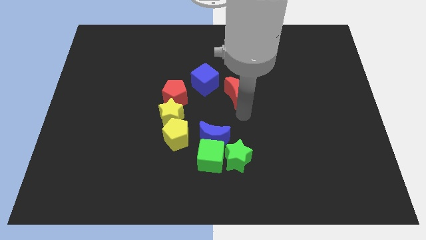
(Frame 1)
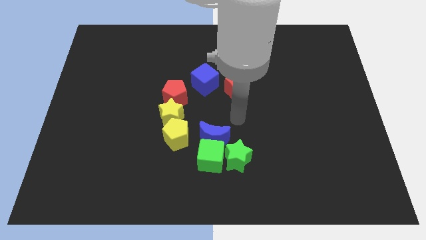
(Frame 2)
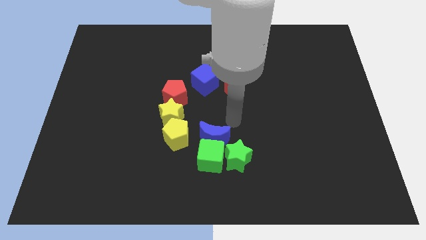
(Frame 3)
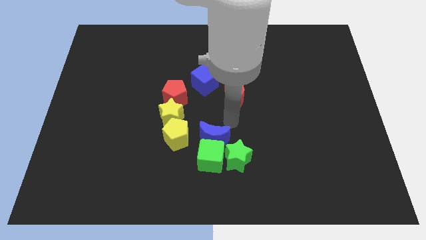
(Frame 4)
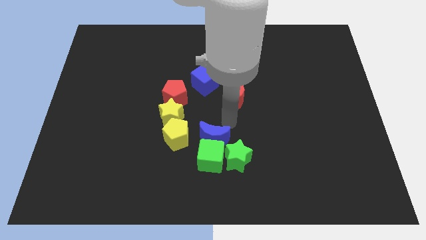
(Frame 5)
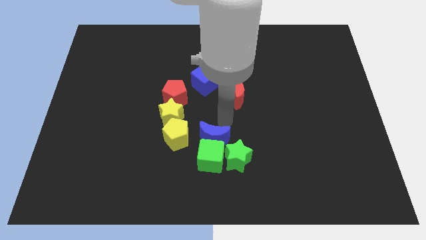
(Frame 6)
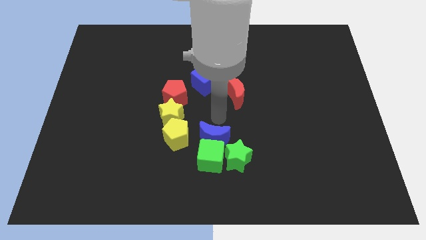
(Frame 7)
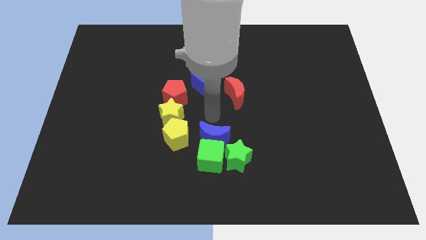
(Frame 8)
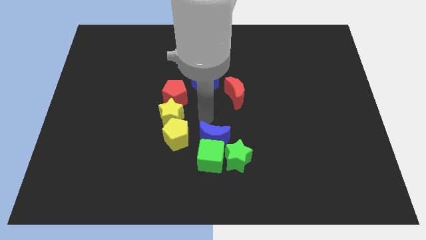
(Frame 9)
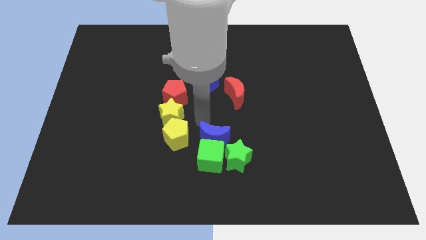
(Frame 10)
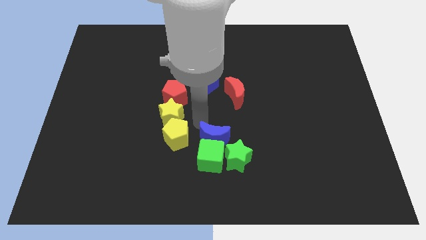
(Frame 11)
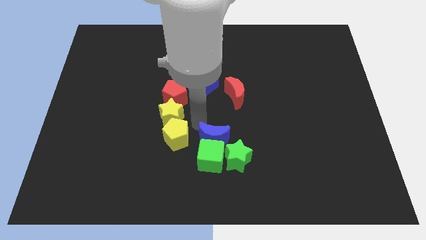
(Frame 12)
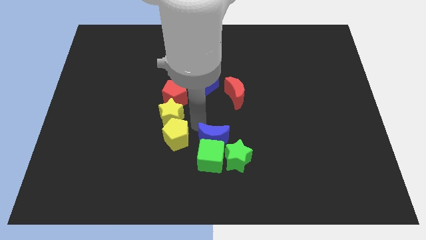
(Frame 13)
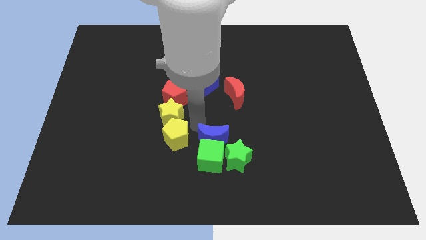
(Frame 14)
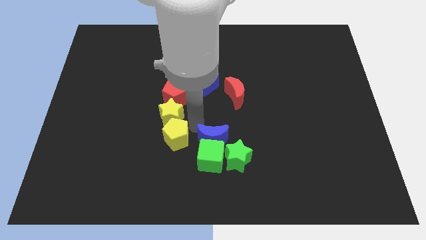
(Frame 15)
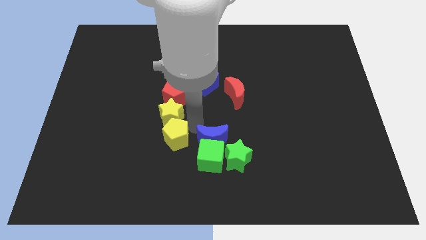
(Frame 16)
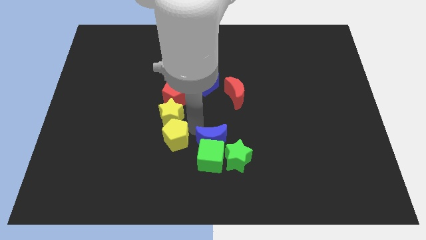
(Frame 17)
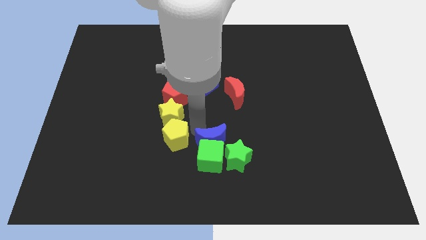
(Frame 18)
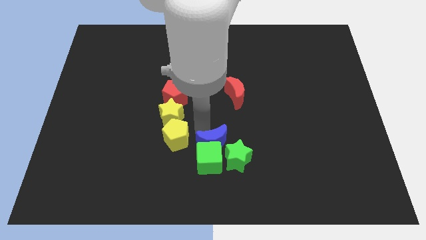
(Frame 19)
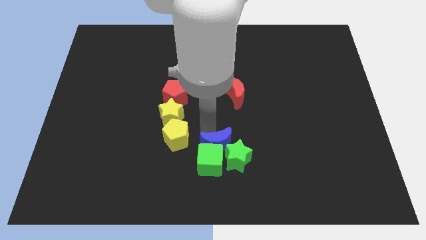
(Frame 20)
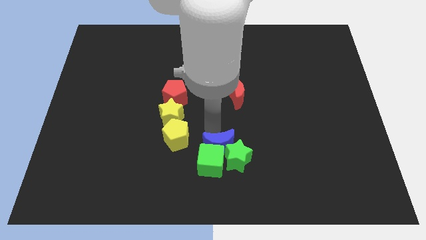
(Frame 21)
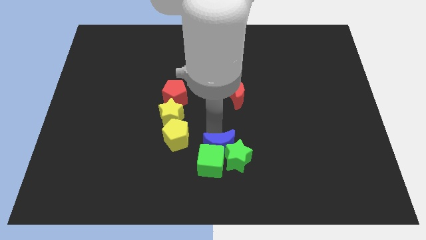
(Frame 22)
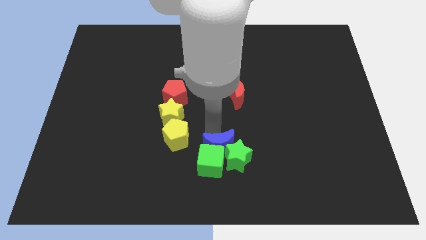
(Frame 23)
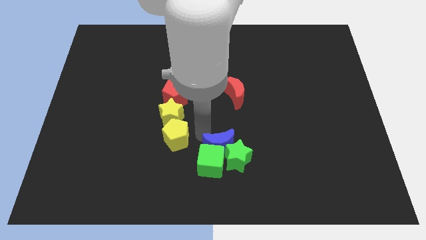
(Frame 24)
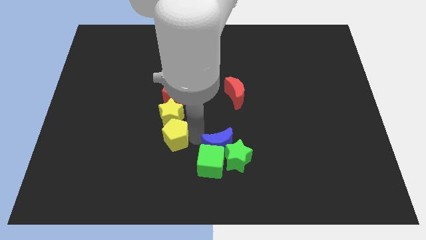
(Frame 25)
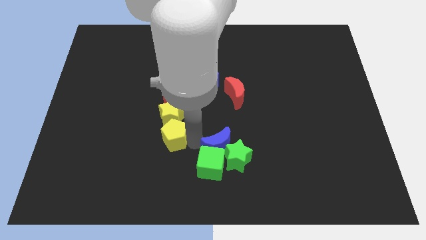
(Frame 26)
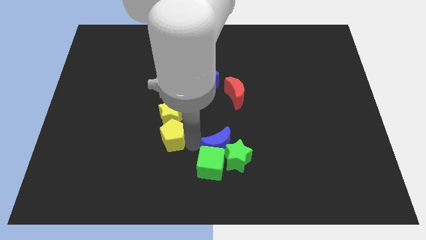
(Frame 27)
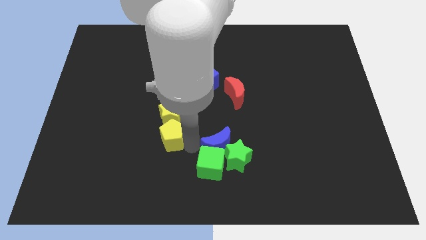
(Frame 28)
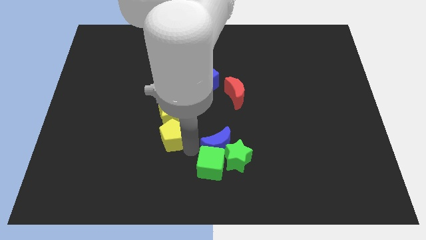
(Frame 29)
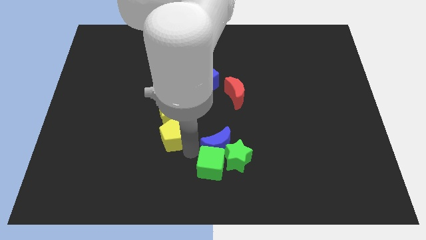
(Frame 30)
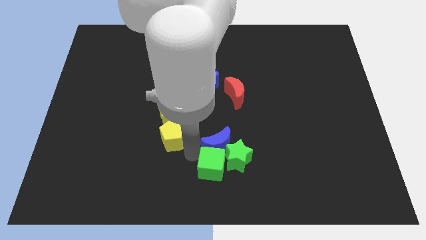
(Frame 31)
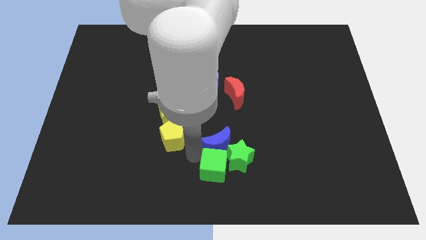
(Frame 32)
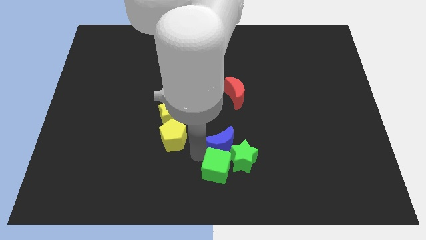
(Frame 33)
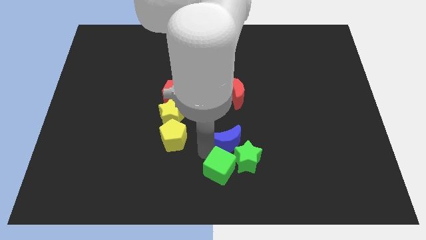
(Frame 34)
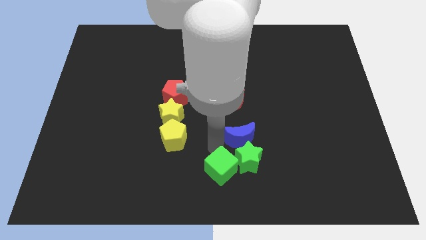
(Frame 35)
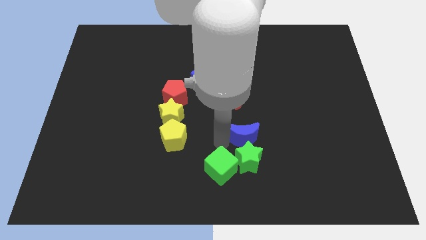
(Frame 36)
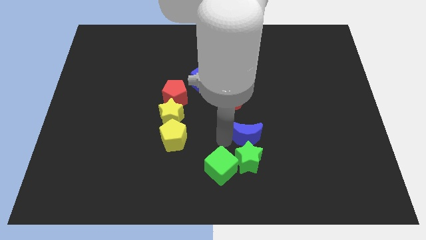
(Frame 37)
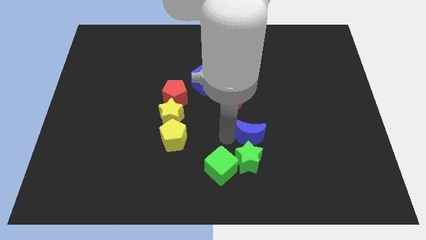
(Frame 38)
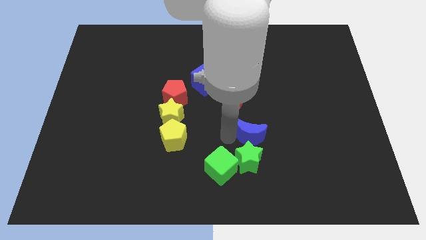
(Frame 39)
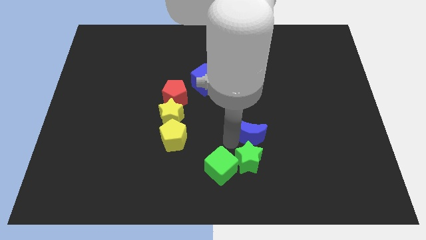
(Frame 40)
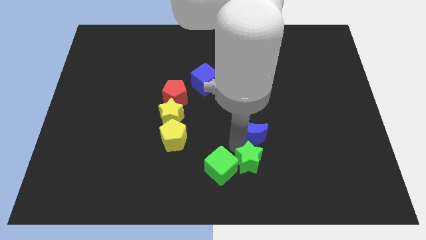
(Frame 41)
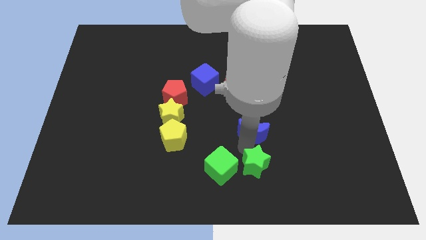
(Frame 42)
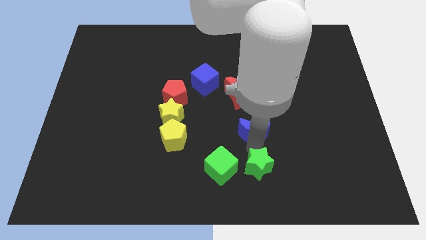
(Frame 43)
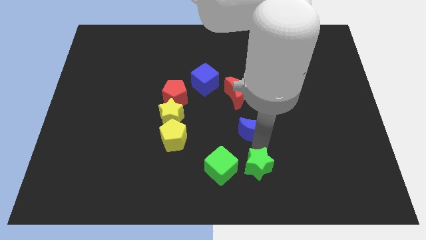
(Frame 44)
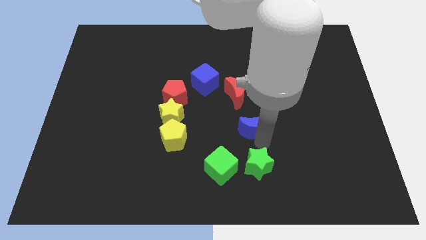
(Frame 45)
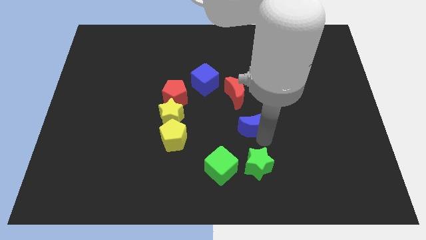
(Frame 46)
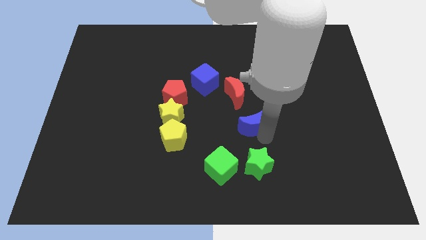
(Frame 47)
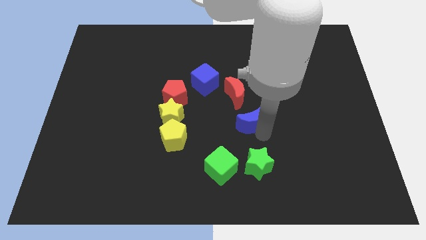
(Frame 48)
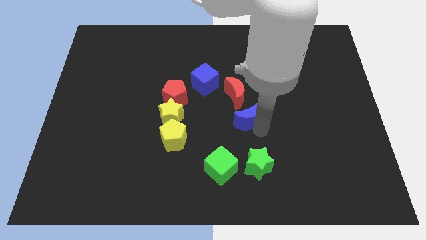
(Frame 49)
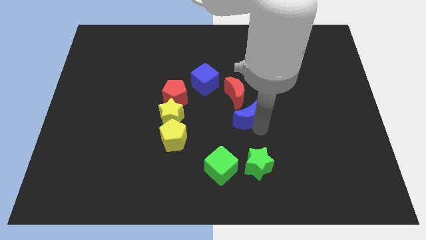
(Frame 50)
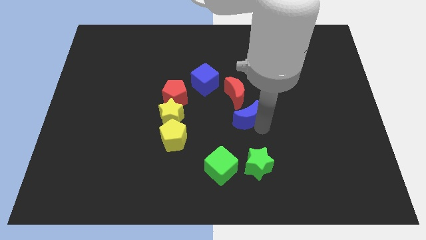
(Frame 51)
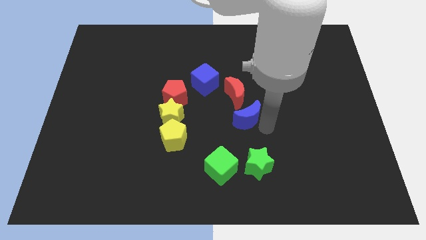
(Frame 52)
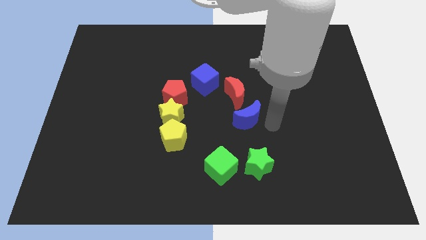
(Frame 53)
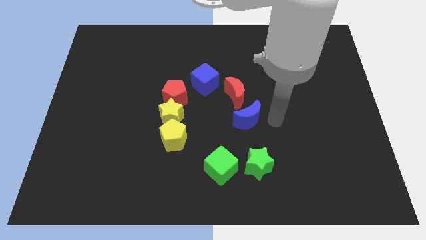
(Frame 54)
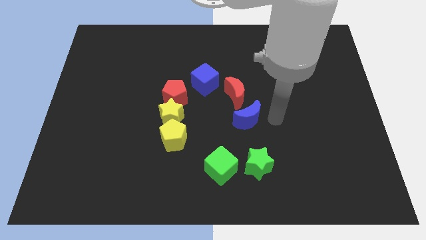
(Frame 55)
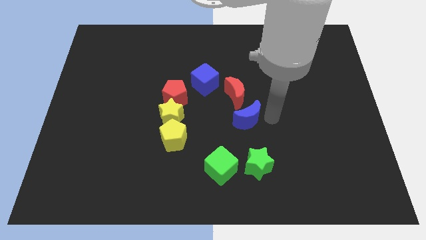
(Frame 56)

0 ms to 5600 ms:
separate blue crescent from the group of blocks

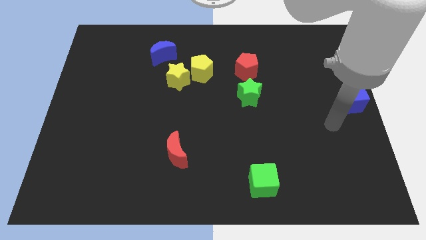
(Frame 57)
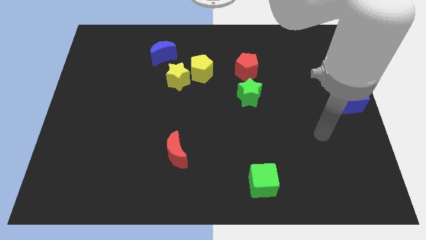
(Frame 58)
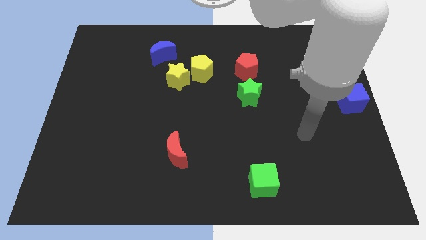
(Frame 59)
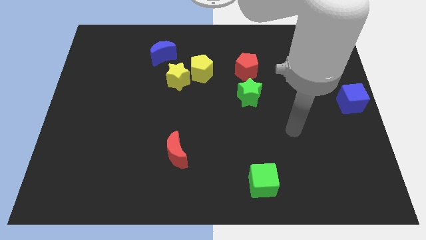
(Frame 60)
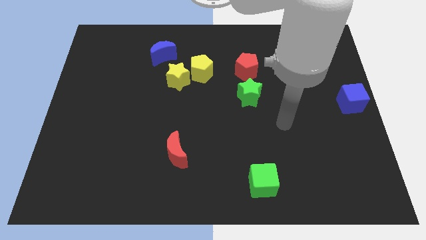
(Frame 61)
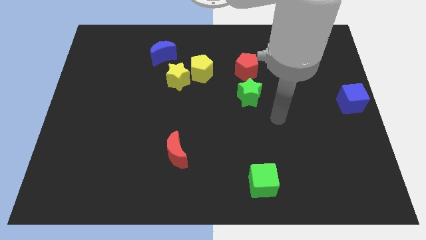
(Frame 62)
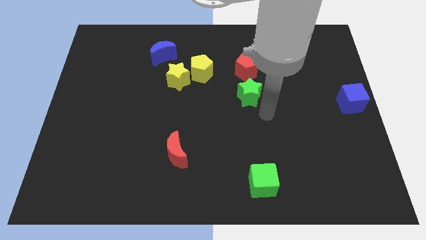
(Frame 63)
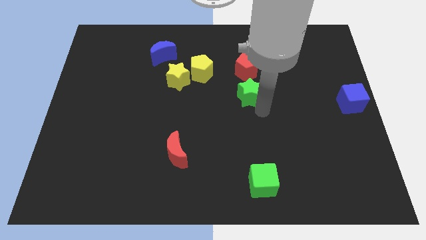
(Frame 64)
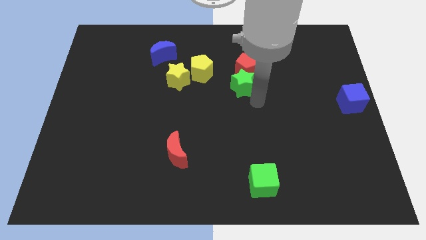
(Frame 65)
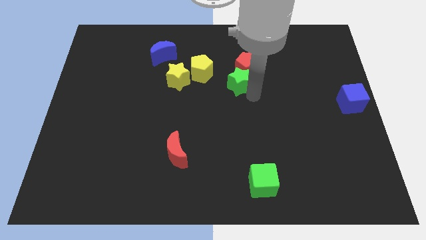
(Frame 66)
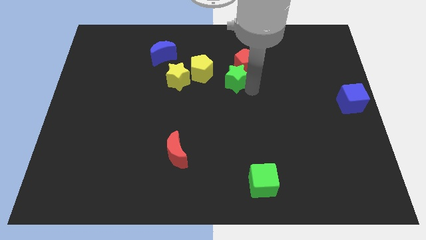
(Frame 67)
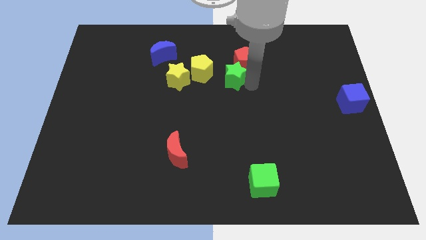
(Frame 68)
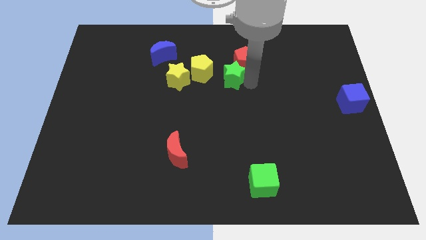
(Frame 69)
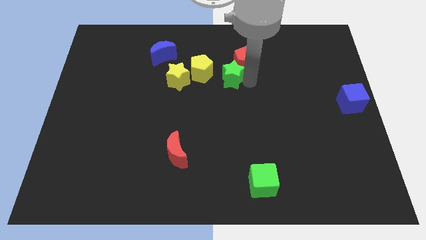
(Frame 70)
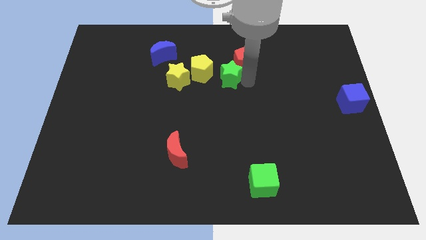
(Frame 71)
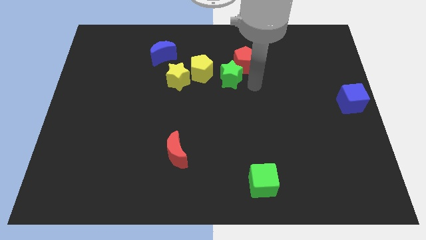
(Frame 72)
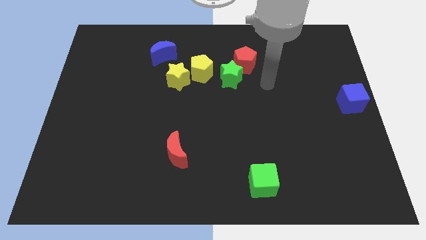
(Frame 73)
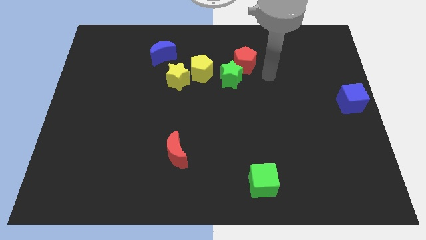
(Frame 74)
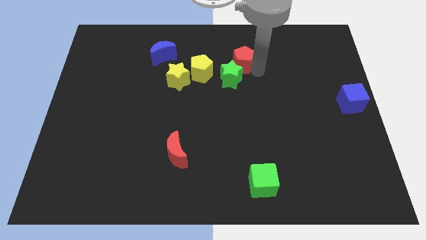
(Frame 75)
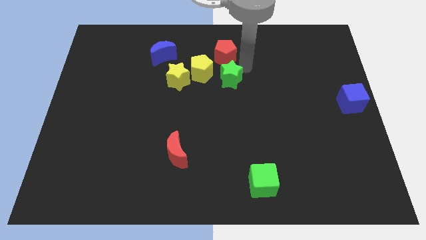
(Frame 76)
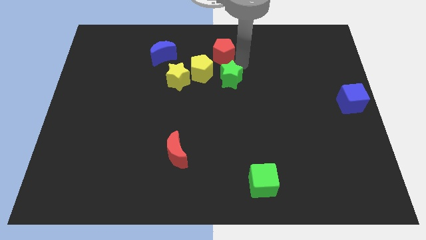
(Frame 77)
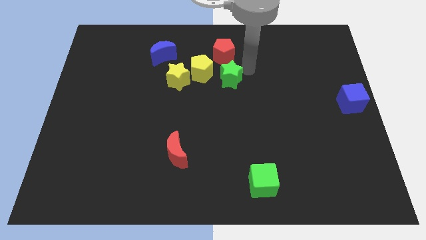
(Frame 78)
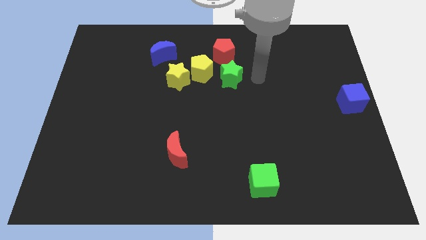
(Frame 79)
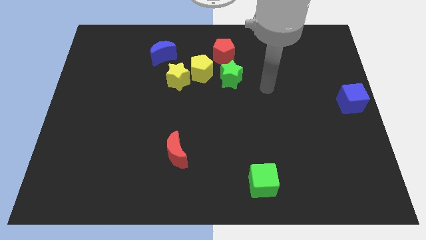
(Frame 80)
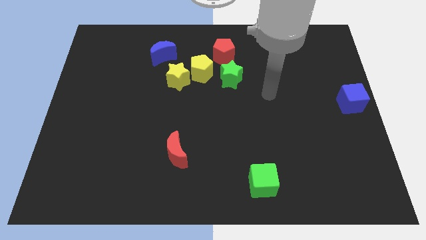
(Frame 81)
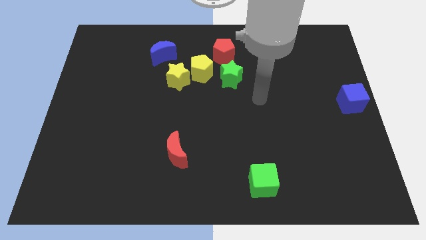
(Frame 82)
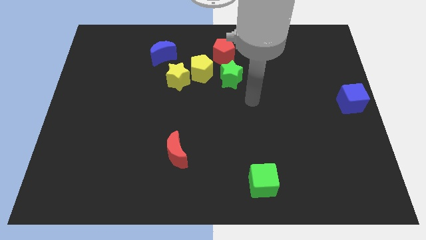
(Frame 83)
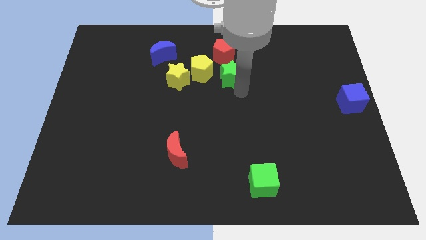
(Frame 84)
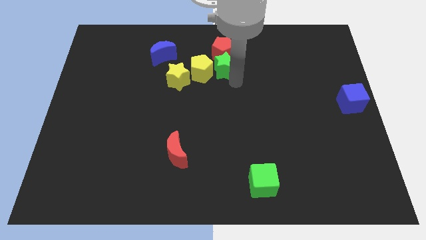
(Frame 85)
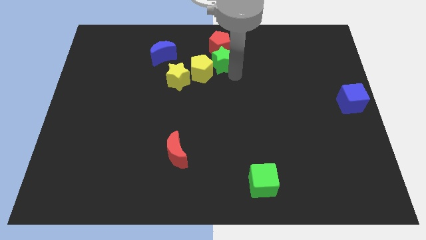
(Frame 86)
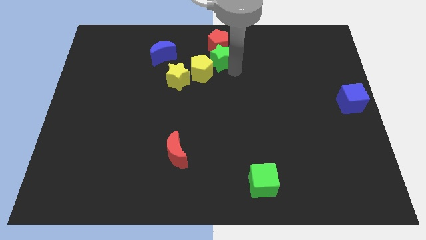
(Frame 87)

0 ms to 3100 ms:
push green star red pentagon into the group of blocks

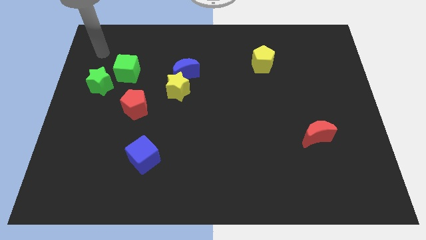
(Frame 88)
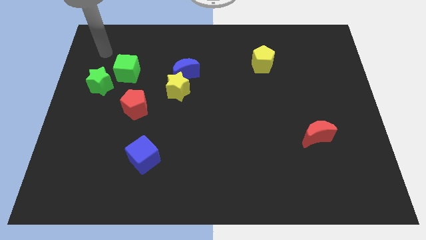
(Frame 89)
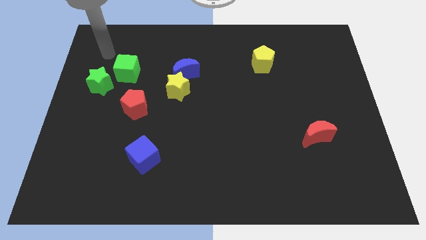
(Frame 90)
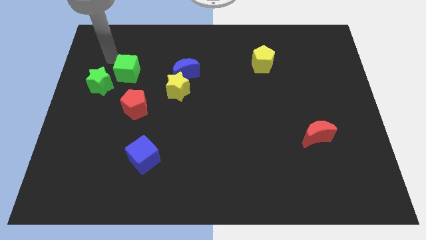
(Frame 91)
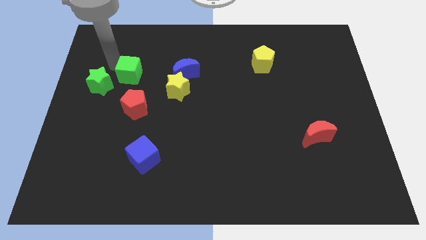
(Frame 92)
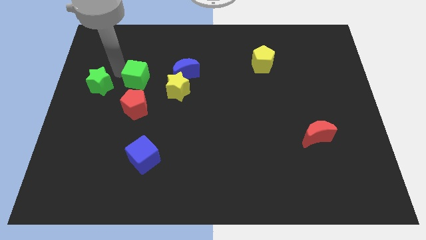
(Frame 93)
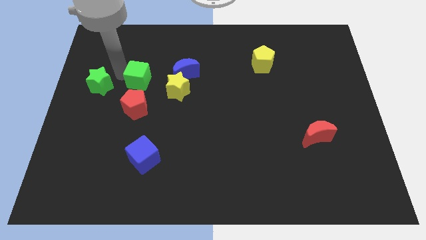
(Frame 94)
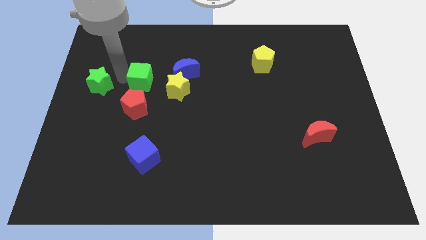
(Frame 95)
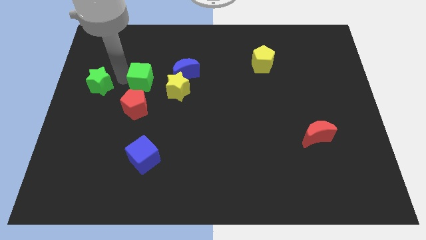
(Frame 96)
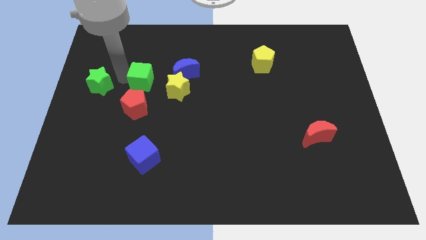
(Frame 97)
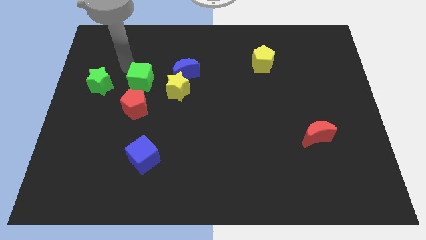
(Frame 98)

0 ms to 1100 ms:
place the green cube above the red pentagon
